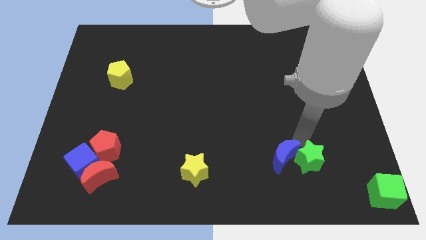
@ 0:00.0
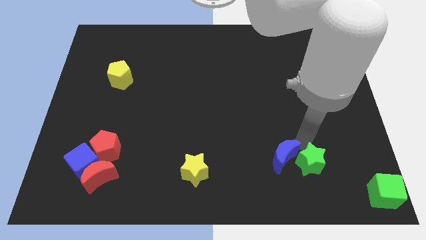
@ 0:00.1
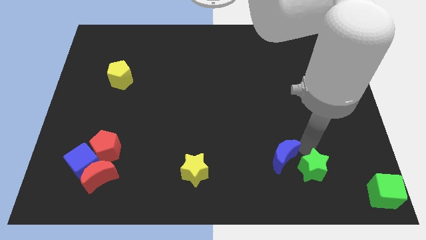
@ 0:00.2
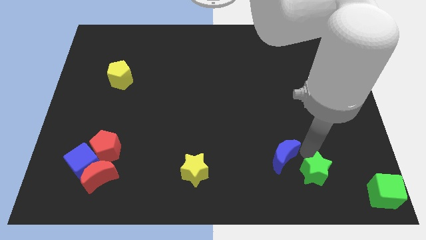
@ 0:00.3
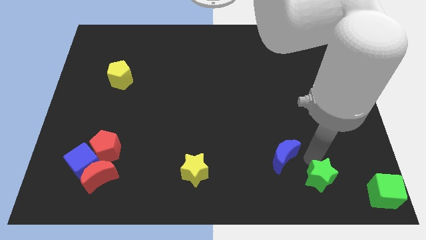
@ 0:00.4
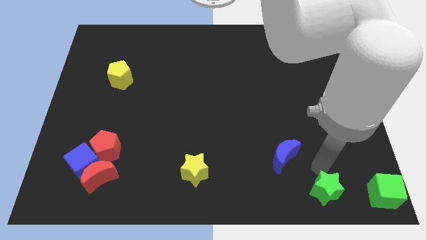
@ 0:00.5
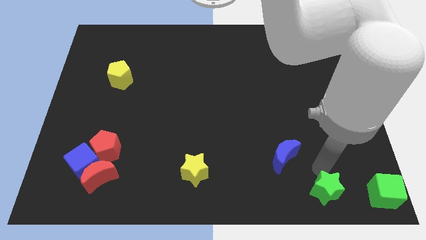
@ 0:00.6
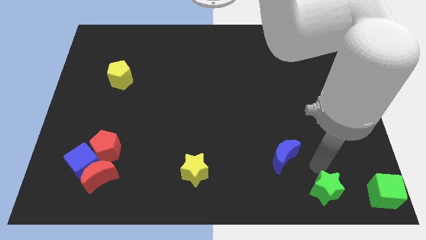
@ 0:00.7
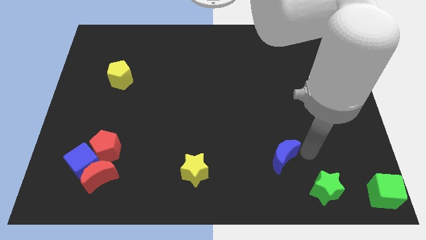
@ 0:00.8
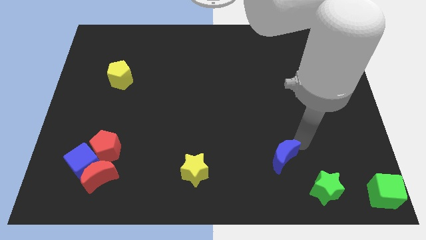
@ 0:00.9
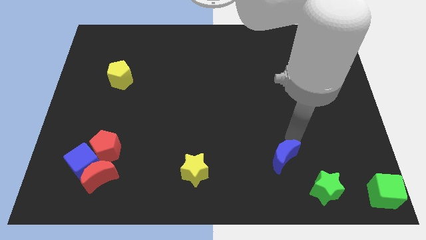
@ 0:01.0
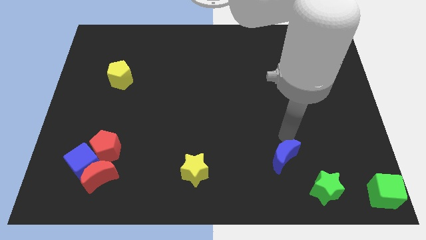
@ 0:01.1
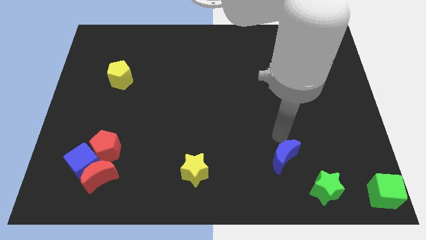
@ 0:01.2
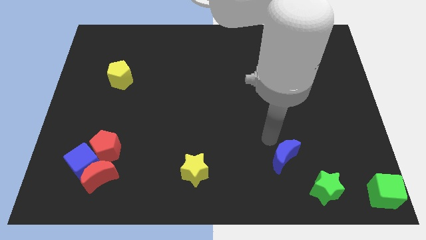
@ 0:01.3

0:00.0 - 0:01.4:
push the green star to the left of the green cube

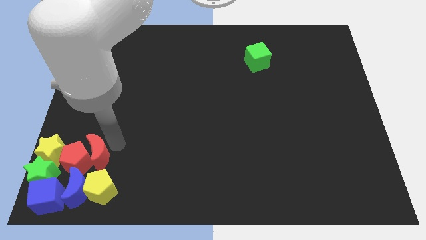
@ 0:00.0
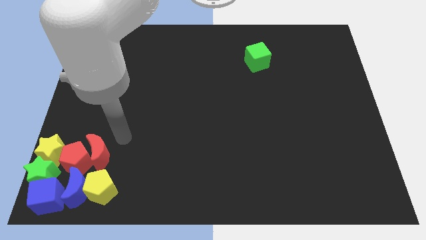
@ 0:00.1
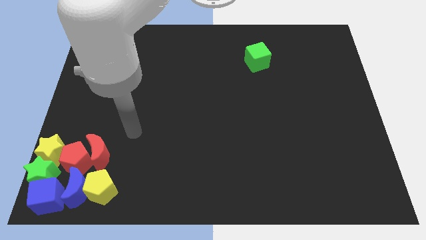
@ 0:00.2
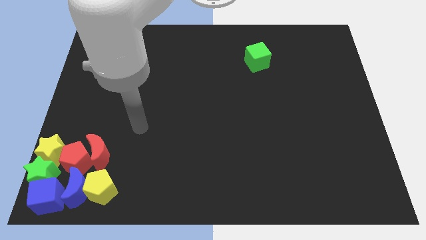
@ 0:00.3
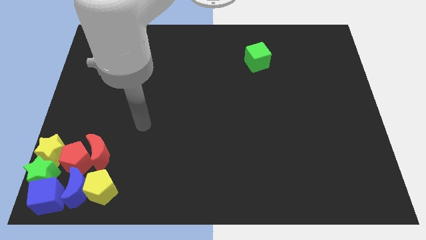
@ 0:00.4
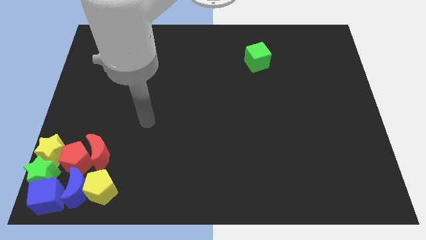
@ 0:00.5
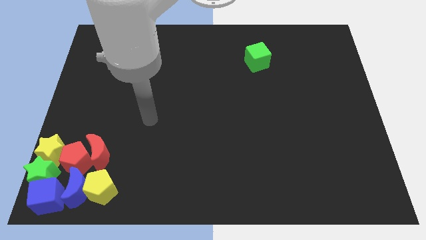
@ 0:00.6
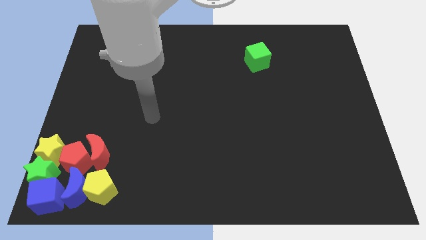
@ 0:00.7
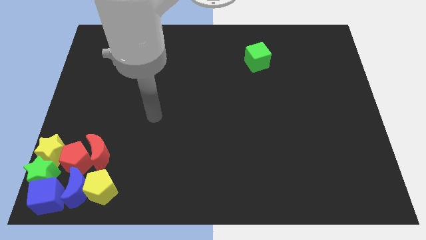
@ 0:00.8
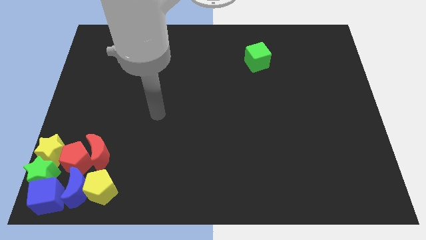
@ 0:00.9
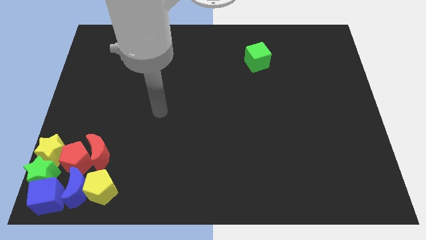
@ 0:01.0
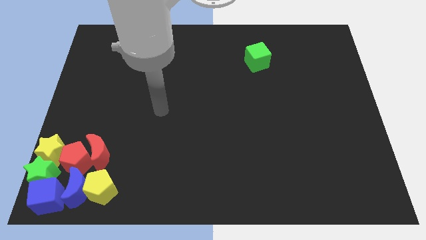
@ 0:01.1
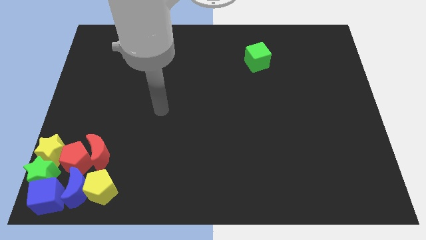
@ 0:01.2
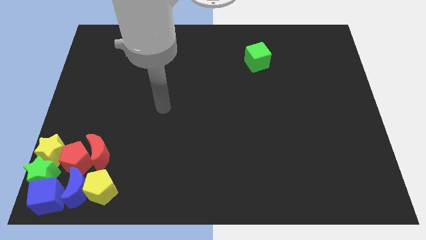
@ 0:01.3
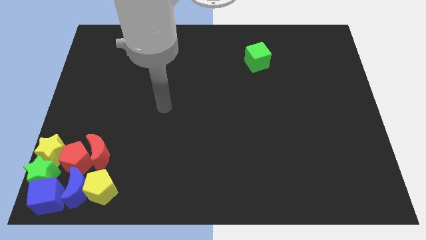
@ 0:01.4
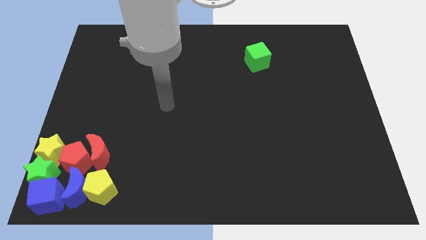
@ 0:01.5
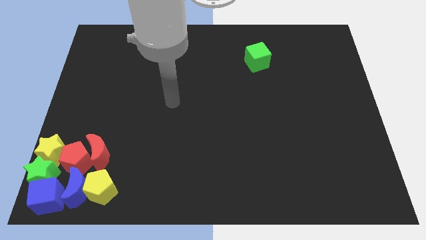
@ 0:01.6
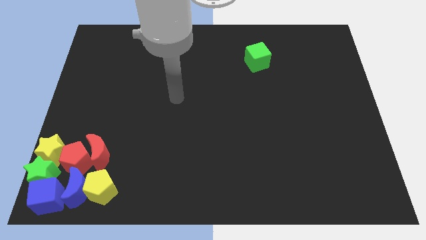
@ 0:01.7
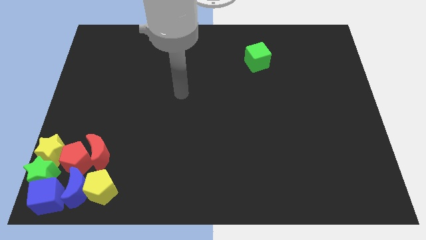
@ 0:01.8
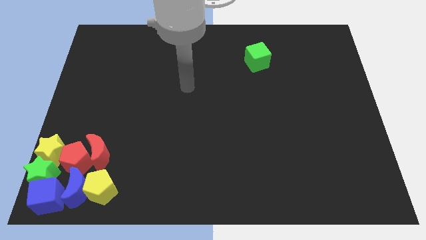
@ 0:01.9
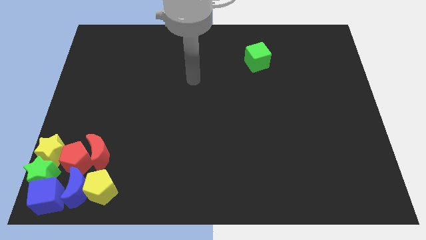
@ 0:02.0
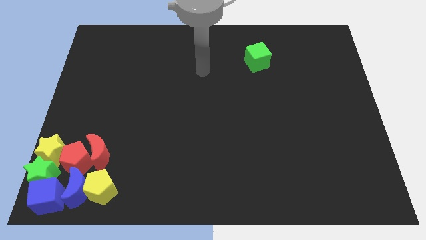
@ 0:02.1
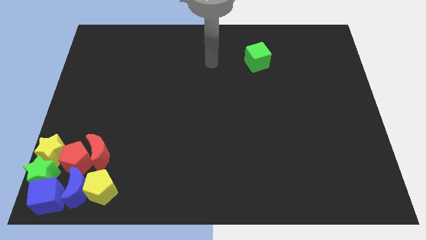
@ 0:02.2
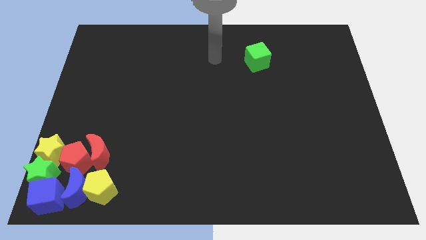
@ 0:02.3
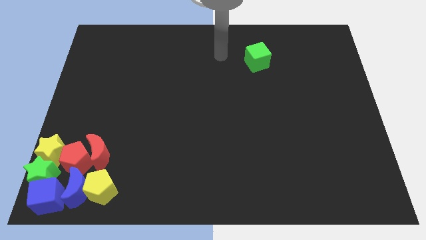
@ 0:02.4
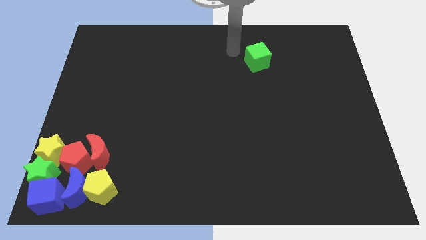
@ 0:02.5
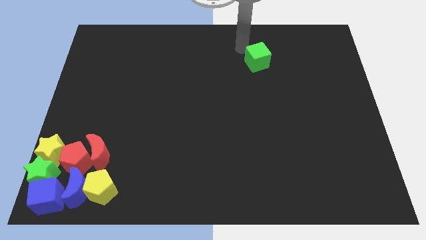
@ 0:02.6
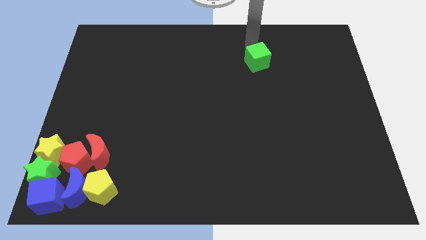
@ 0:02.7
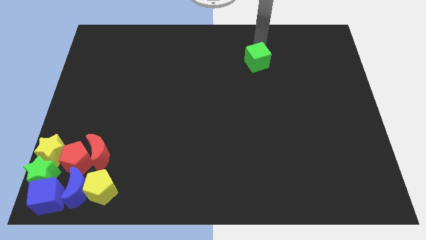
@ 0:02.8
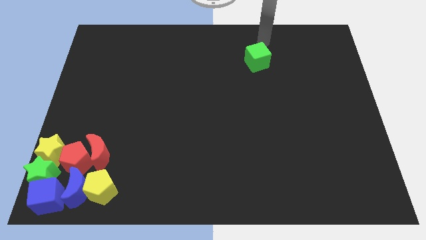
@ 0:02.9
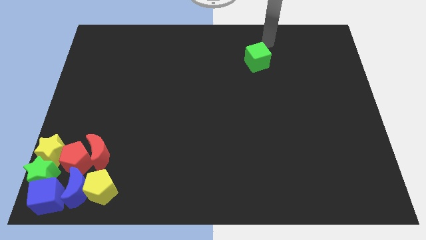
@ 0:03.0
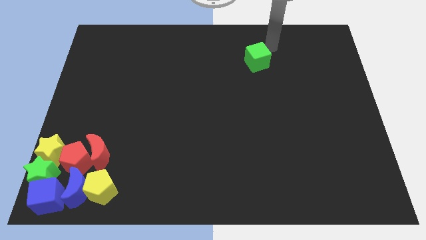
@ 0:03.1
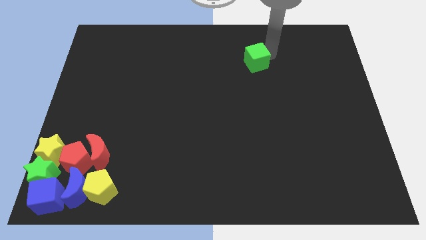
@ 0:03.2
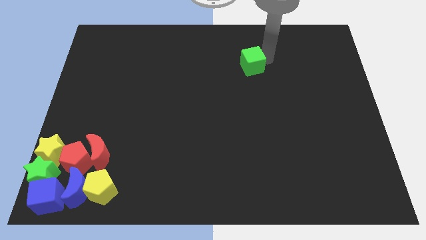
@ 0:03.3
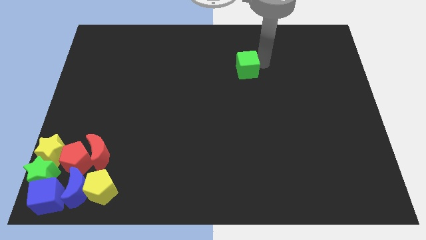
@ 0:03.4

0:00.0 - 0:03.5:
tap the right side of the green cube

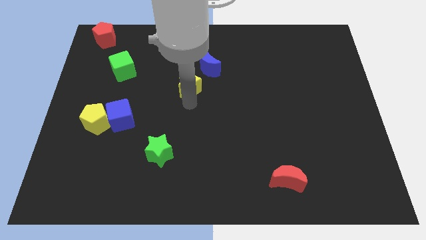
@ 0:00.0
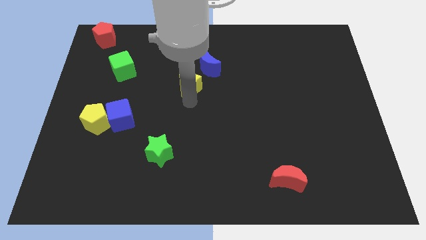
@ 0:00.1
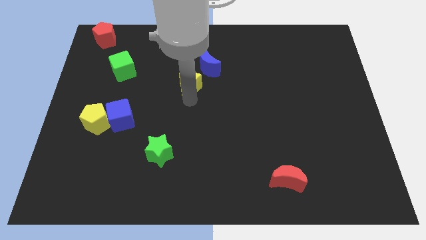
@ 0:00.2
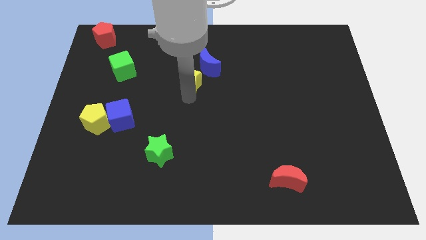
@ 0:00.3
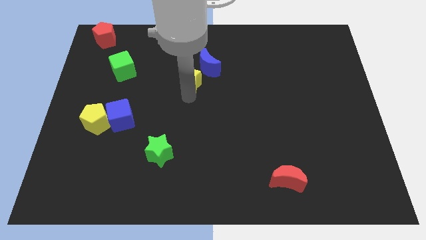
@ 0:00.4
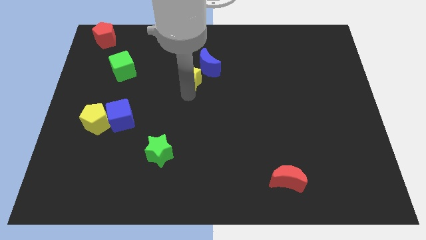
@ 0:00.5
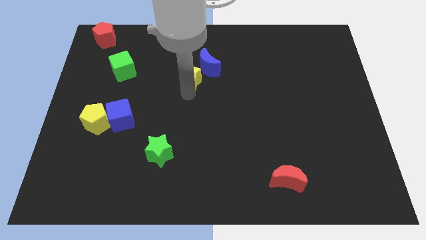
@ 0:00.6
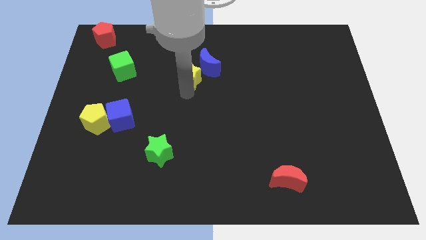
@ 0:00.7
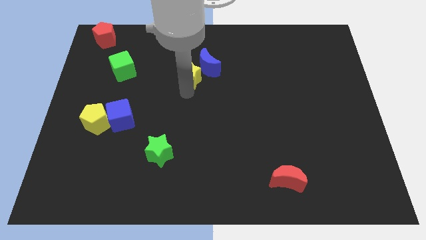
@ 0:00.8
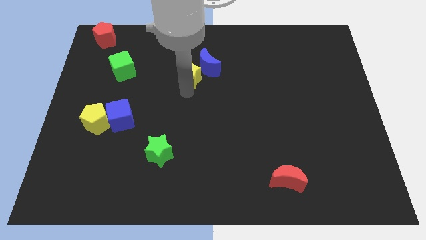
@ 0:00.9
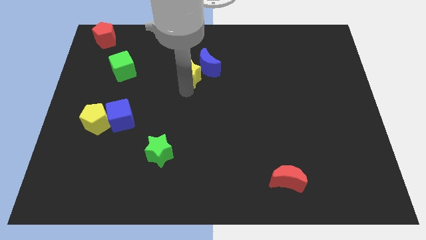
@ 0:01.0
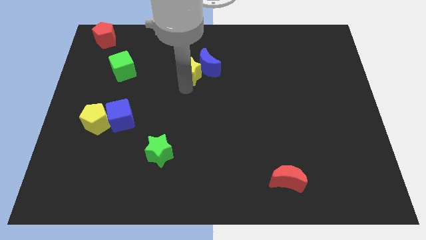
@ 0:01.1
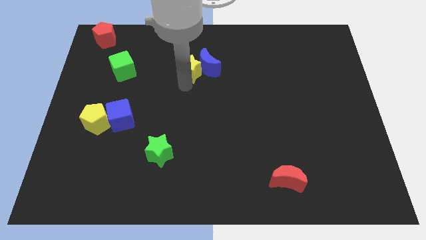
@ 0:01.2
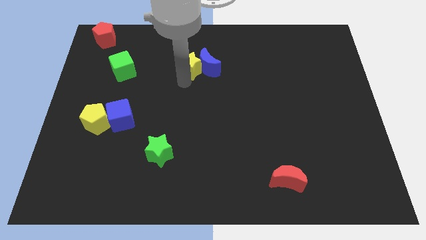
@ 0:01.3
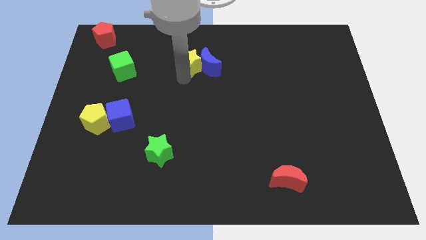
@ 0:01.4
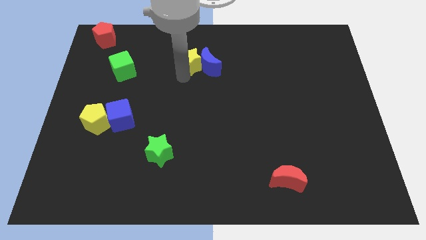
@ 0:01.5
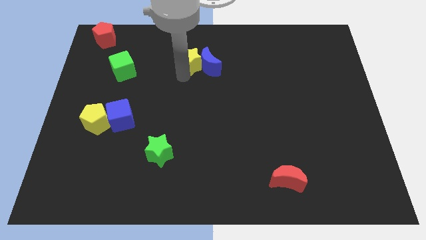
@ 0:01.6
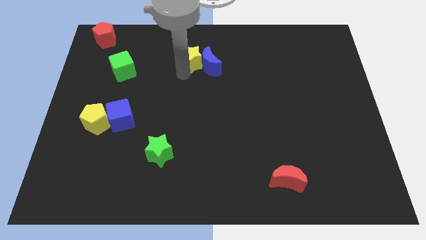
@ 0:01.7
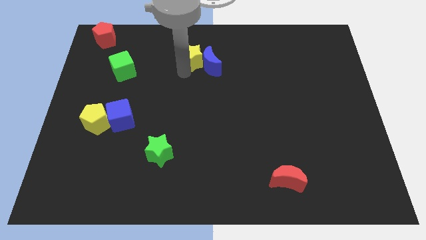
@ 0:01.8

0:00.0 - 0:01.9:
put the yellow star to the left side of the blue crescent

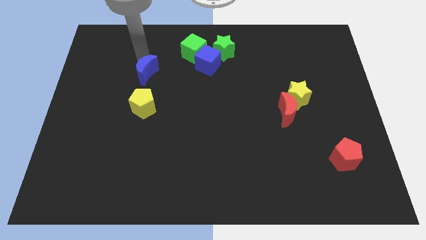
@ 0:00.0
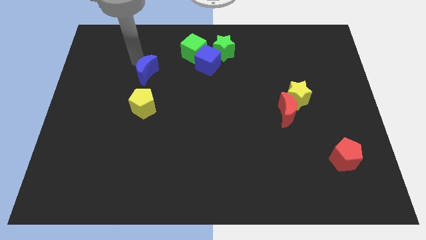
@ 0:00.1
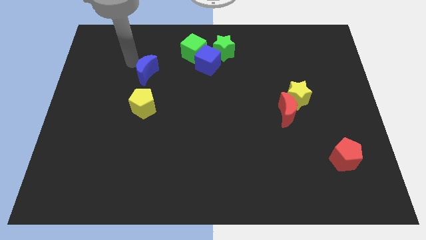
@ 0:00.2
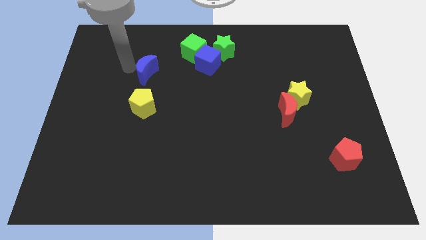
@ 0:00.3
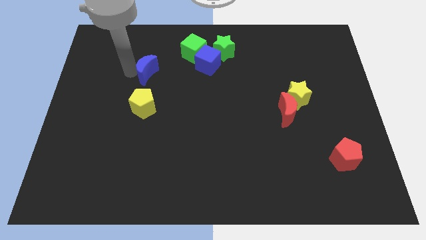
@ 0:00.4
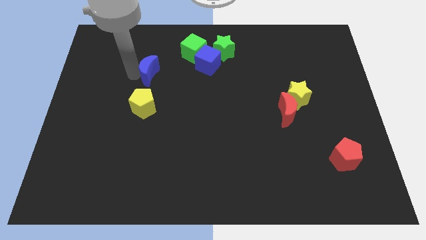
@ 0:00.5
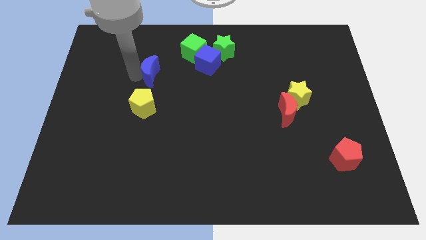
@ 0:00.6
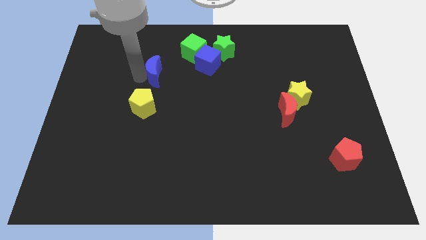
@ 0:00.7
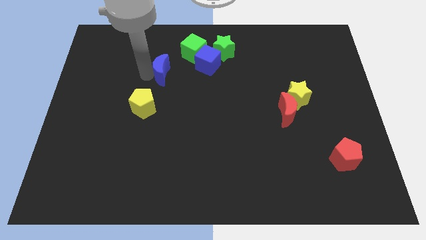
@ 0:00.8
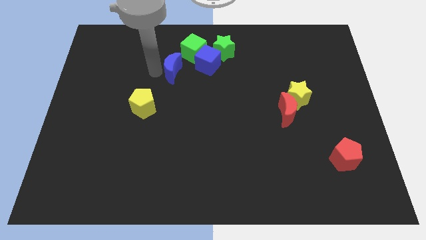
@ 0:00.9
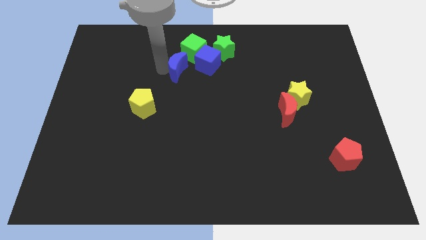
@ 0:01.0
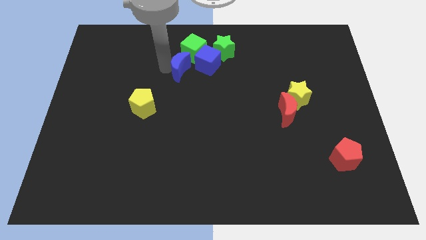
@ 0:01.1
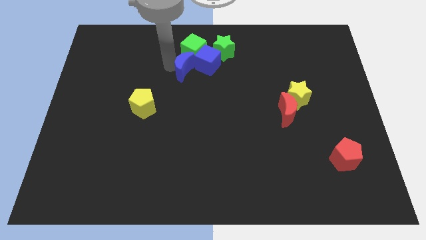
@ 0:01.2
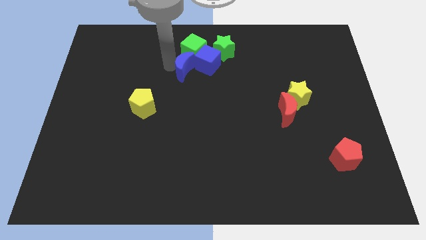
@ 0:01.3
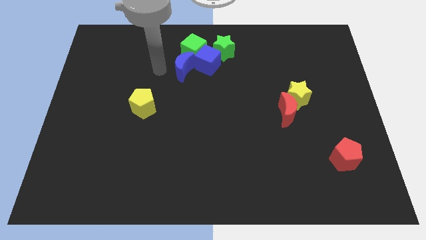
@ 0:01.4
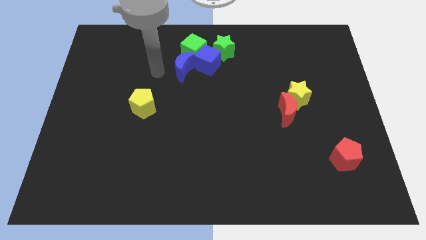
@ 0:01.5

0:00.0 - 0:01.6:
make the blue crescent touch the blue cube

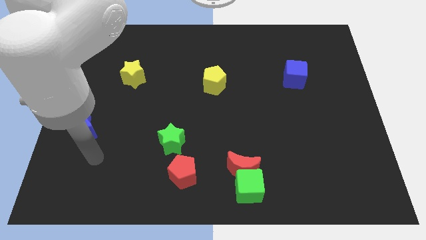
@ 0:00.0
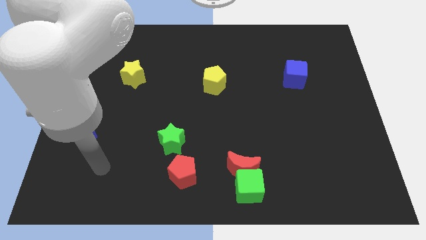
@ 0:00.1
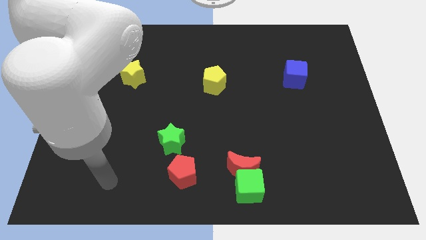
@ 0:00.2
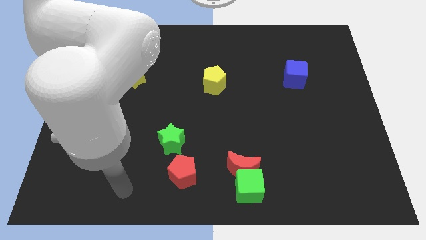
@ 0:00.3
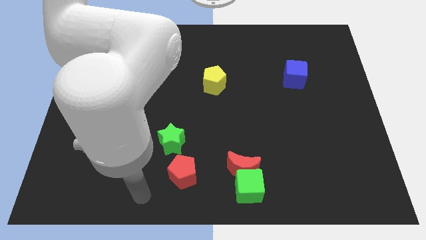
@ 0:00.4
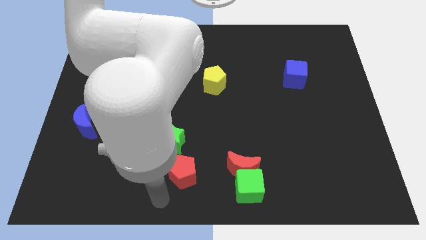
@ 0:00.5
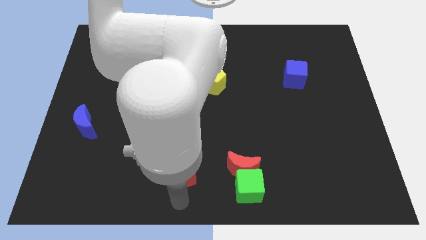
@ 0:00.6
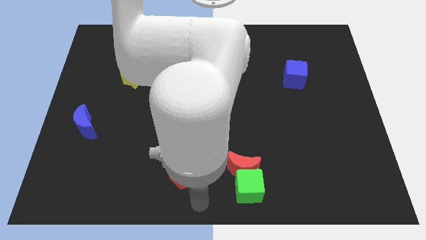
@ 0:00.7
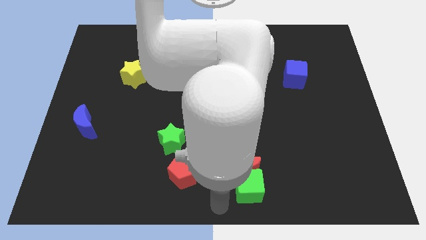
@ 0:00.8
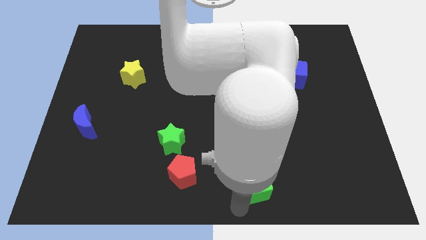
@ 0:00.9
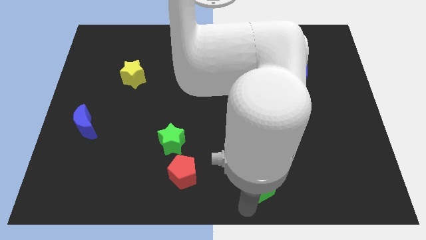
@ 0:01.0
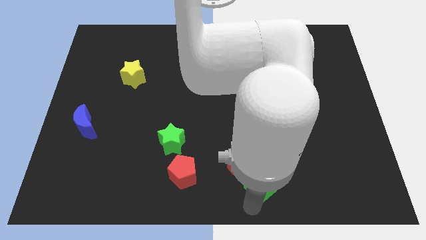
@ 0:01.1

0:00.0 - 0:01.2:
touch the bottom of the green cube
